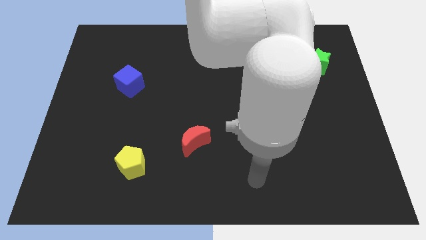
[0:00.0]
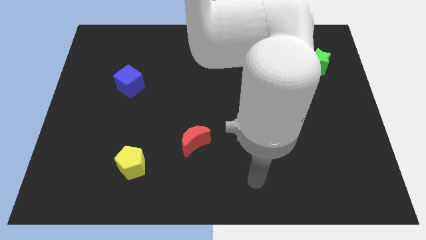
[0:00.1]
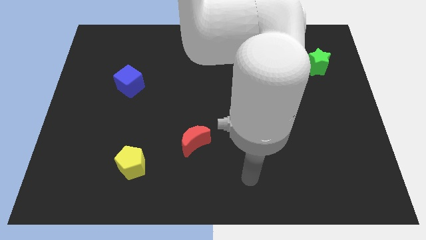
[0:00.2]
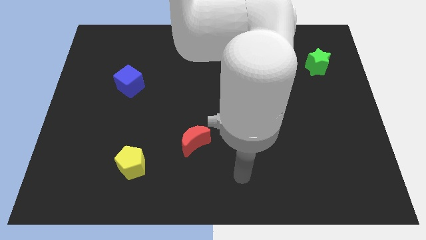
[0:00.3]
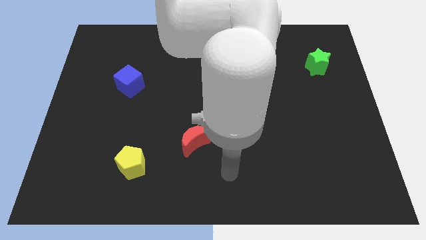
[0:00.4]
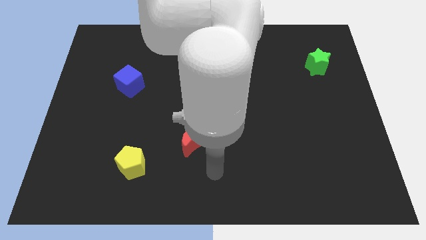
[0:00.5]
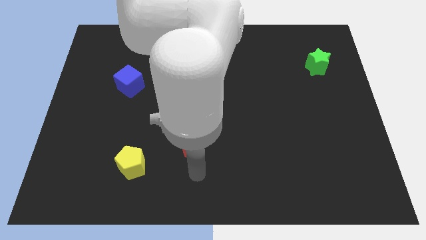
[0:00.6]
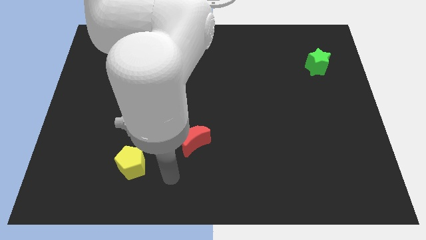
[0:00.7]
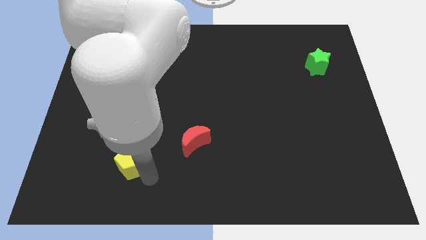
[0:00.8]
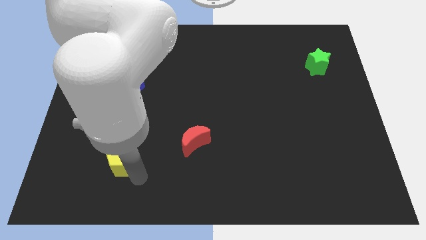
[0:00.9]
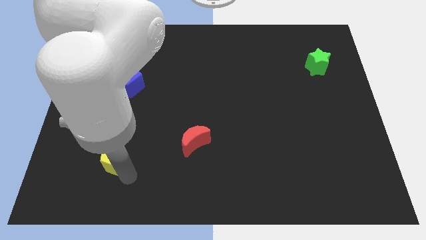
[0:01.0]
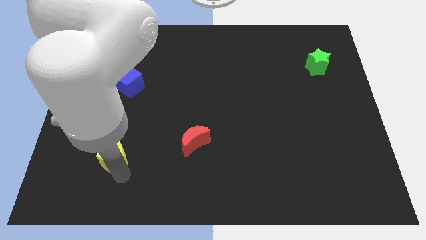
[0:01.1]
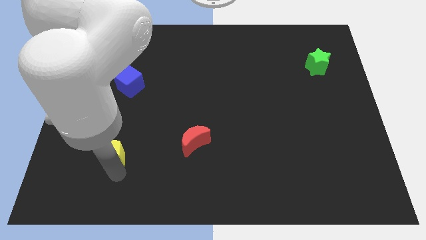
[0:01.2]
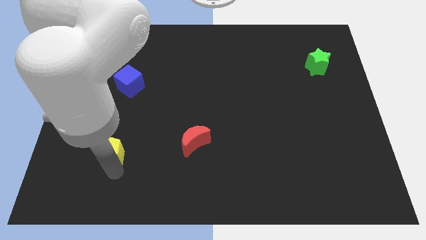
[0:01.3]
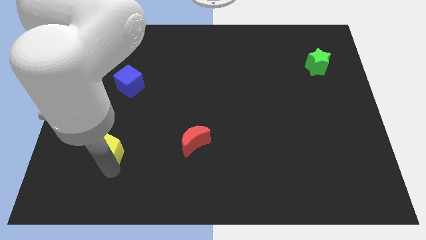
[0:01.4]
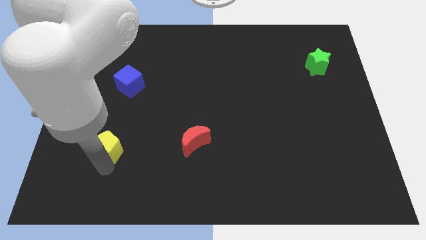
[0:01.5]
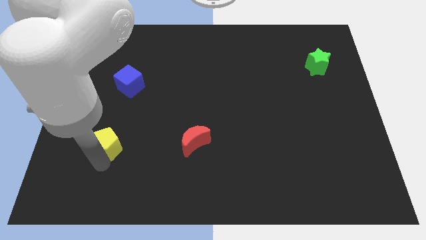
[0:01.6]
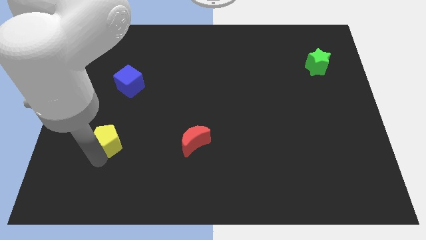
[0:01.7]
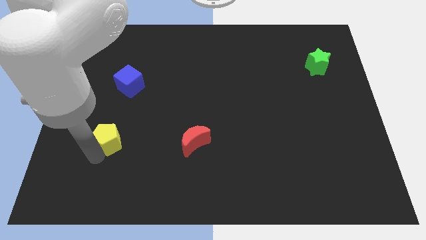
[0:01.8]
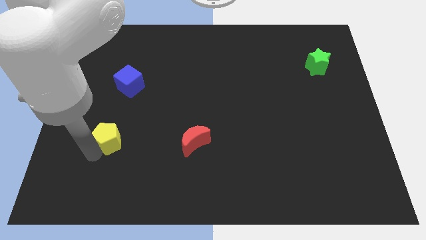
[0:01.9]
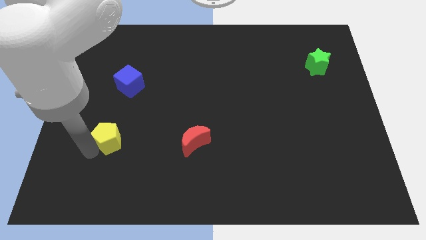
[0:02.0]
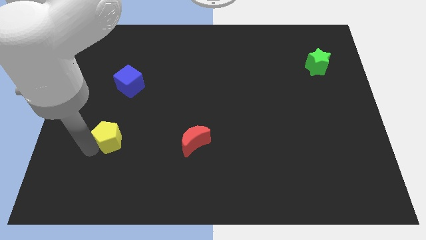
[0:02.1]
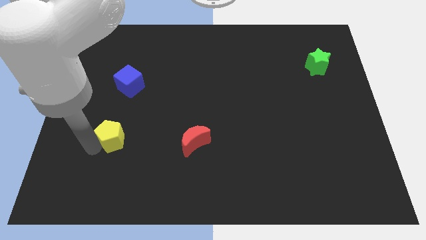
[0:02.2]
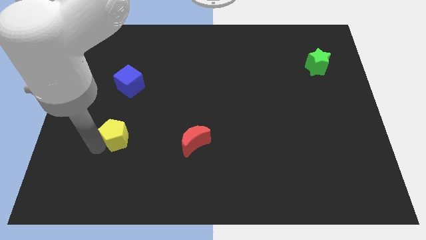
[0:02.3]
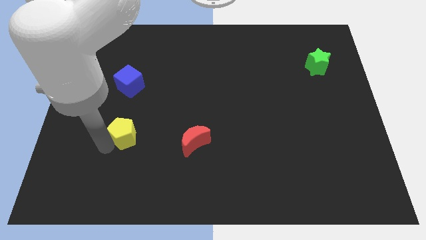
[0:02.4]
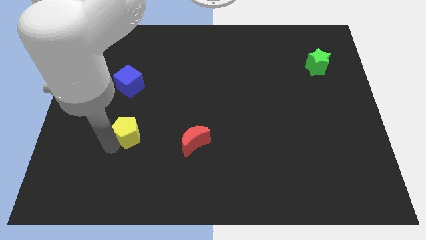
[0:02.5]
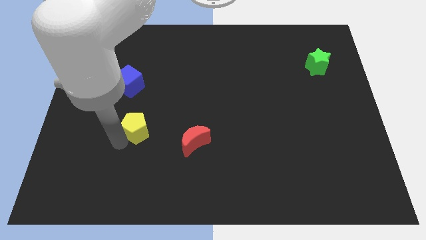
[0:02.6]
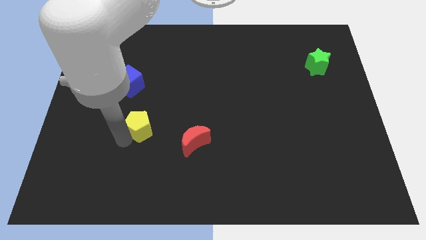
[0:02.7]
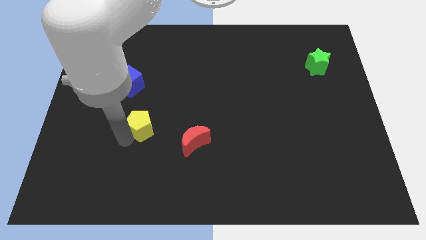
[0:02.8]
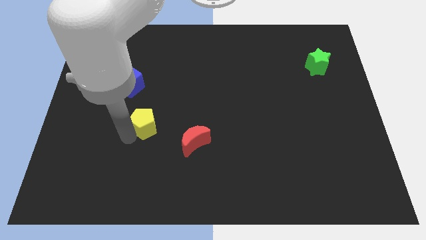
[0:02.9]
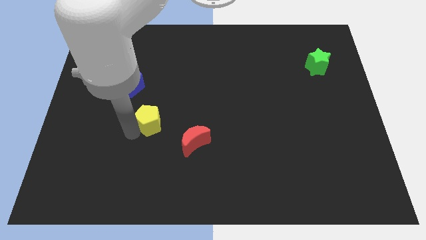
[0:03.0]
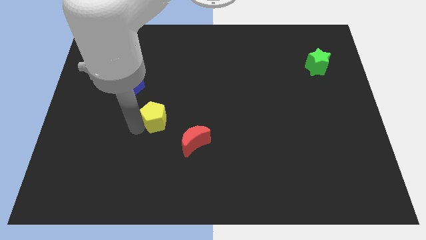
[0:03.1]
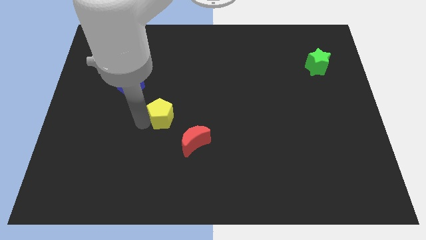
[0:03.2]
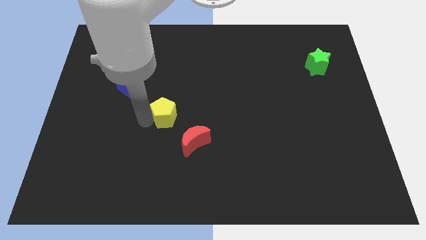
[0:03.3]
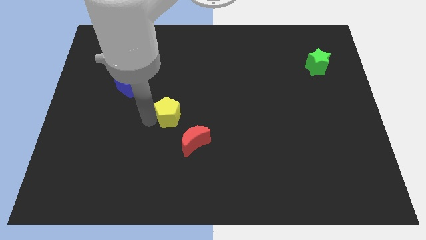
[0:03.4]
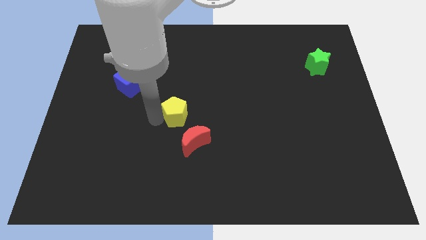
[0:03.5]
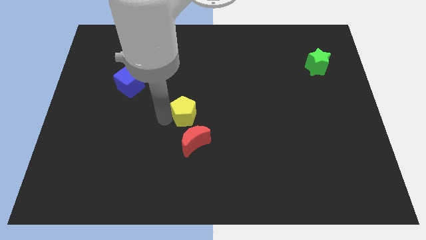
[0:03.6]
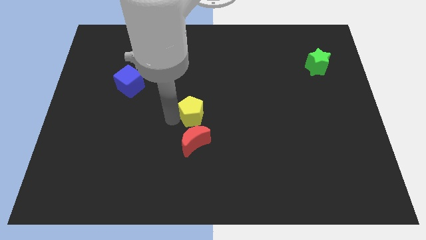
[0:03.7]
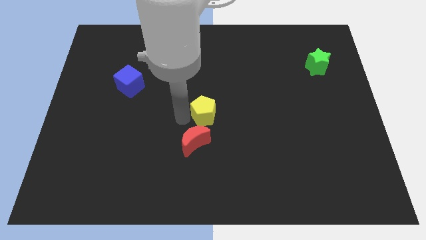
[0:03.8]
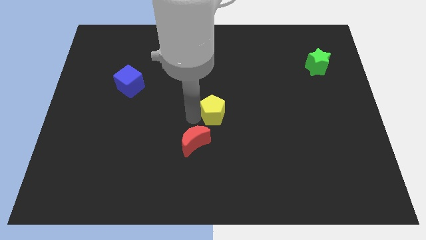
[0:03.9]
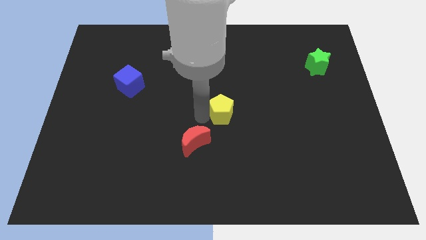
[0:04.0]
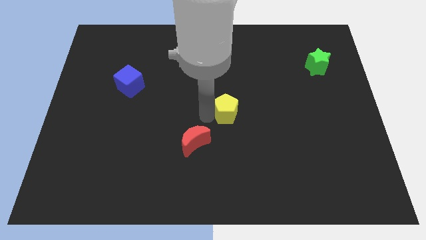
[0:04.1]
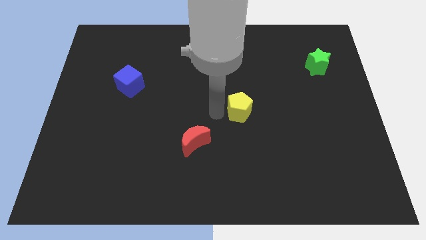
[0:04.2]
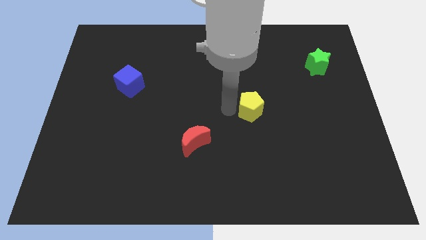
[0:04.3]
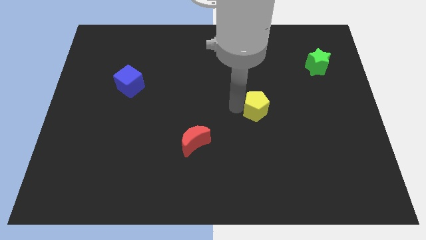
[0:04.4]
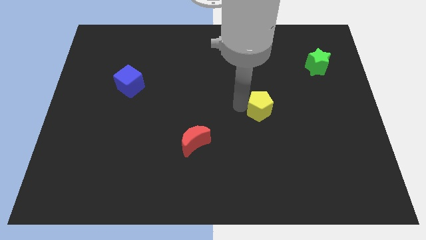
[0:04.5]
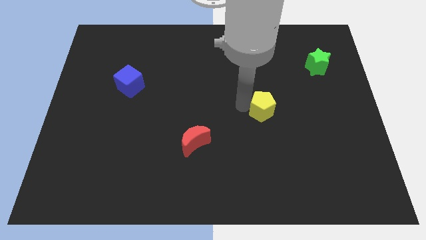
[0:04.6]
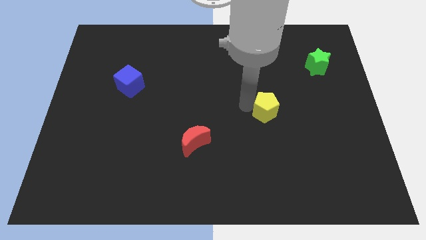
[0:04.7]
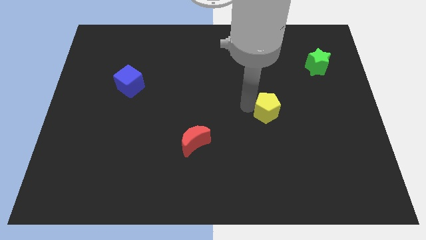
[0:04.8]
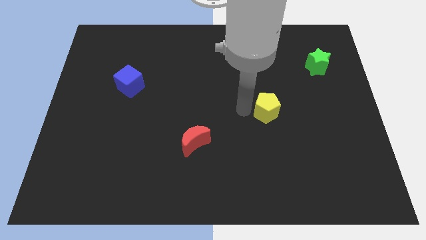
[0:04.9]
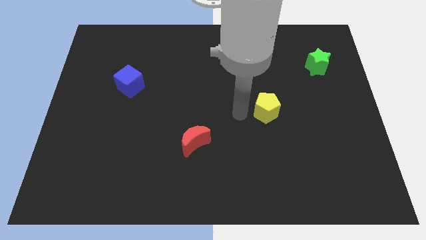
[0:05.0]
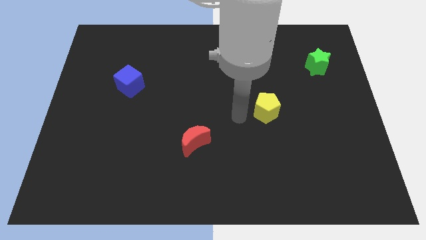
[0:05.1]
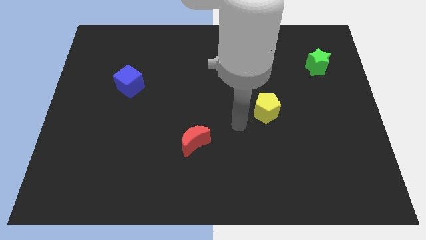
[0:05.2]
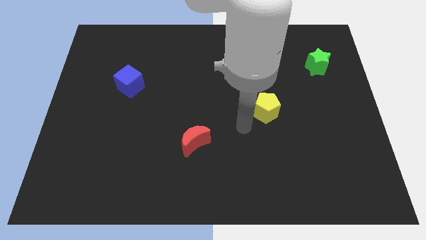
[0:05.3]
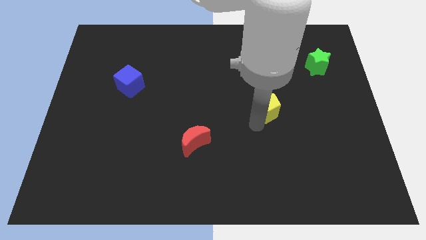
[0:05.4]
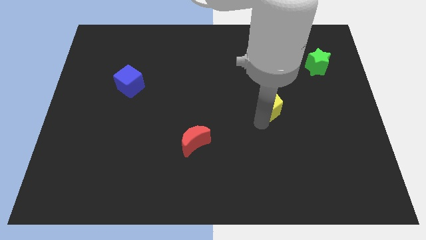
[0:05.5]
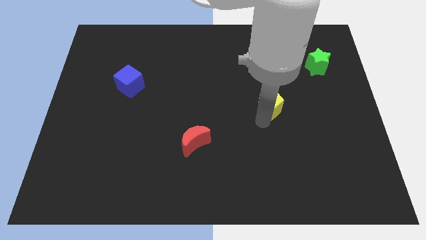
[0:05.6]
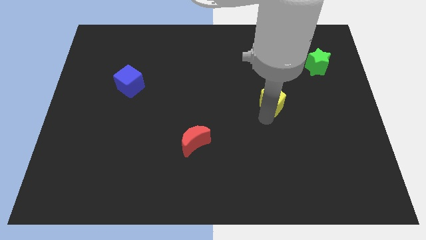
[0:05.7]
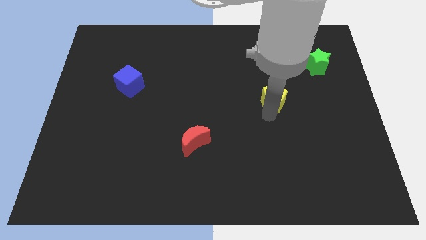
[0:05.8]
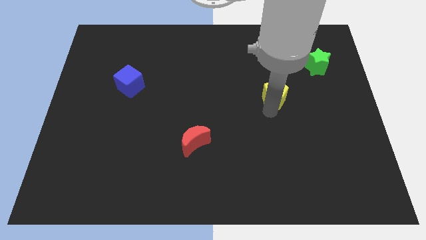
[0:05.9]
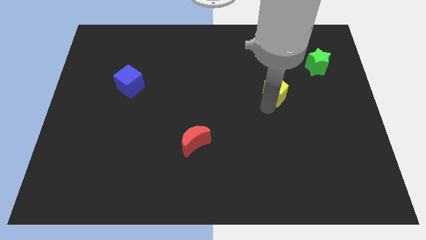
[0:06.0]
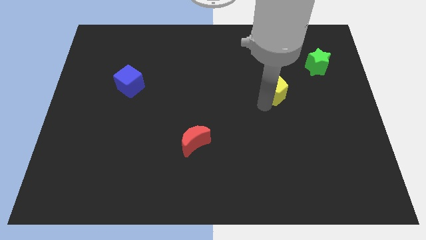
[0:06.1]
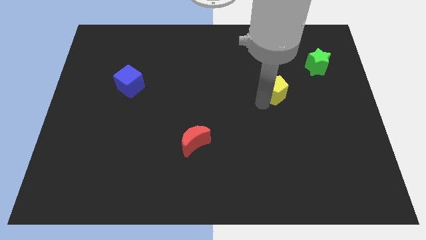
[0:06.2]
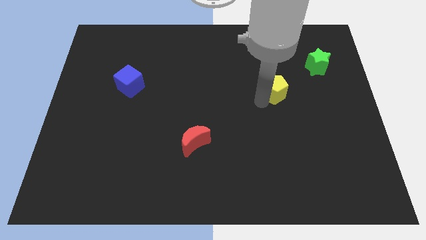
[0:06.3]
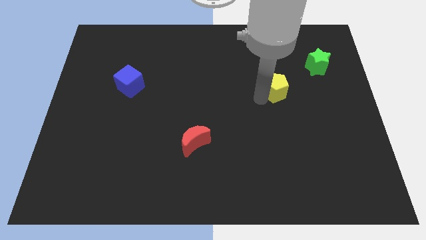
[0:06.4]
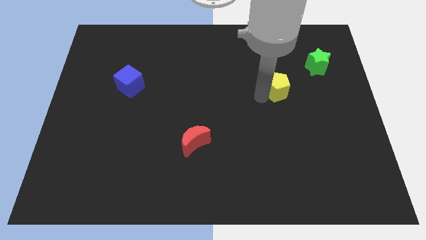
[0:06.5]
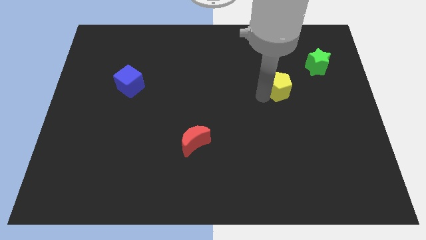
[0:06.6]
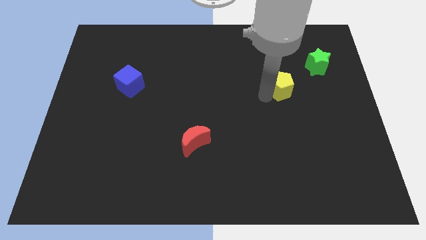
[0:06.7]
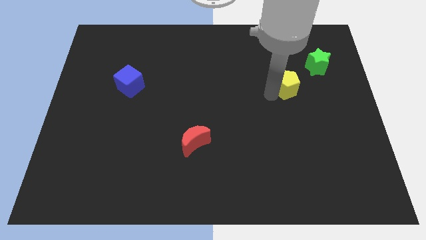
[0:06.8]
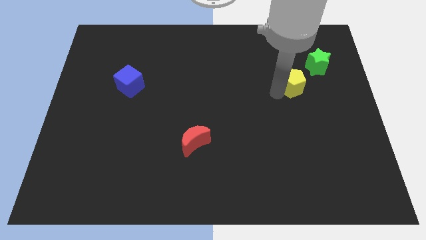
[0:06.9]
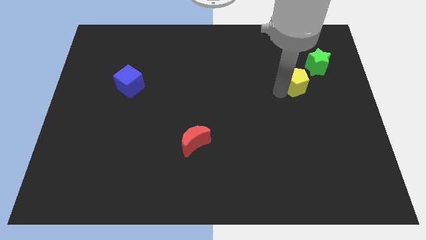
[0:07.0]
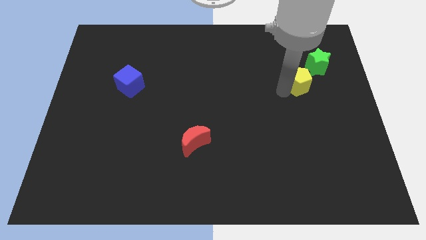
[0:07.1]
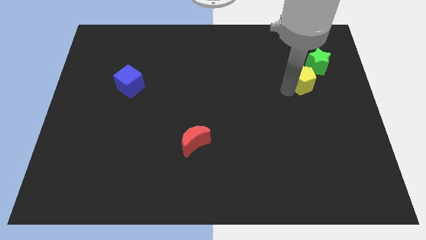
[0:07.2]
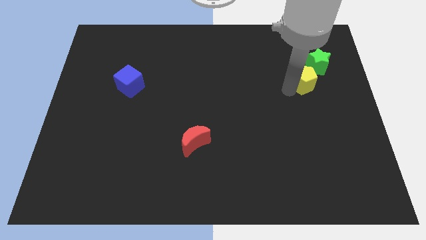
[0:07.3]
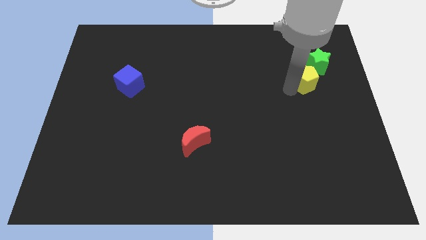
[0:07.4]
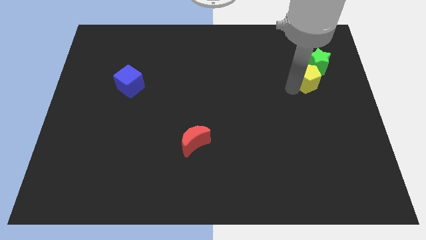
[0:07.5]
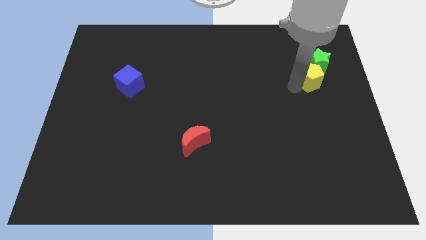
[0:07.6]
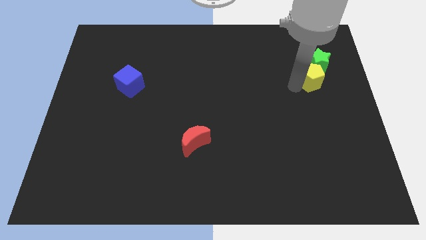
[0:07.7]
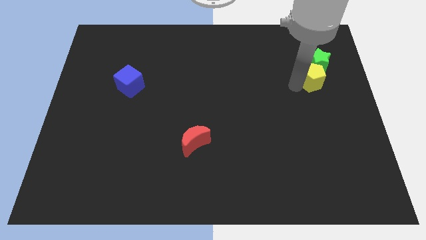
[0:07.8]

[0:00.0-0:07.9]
slide the yellow block towards the green star

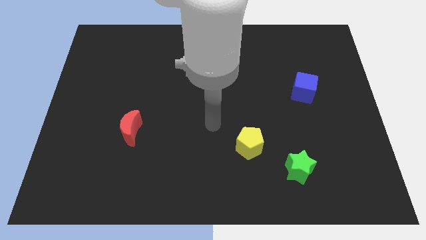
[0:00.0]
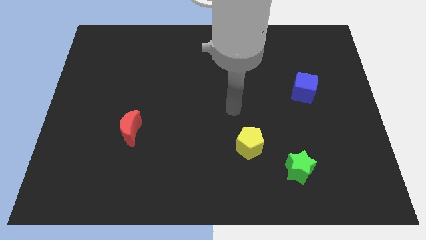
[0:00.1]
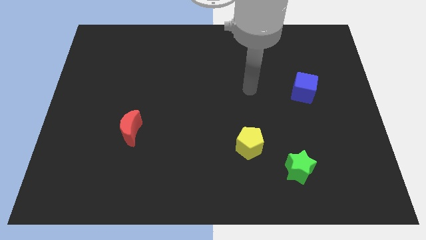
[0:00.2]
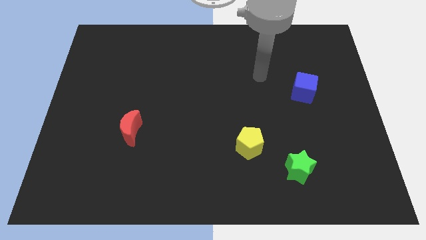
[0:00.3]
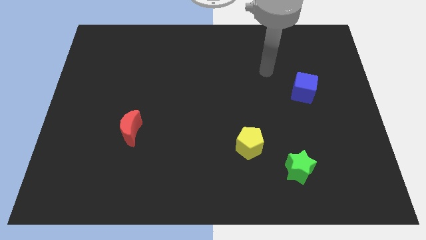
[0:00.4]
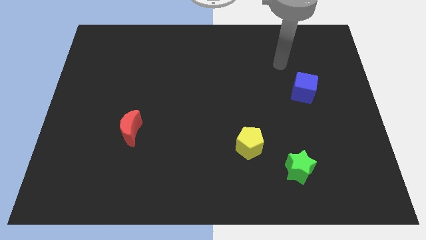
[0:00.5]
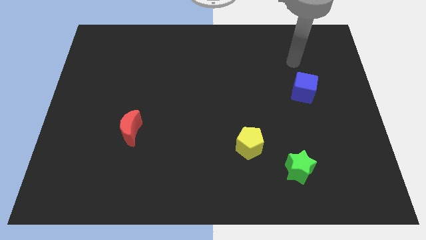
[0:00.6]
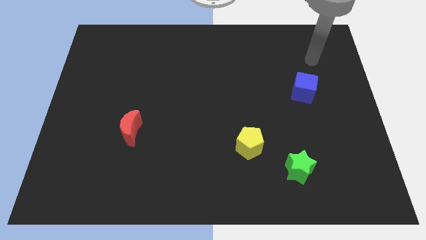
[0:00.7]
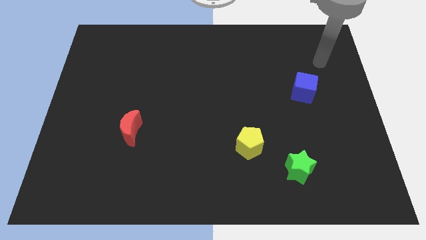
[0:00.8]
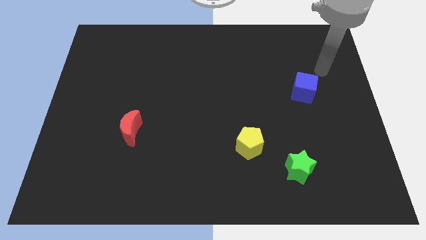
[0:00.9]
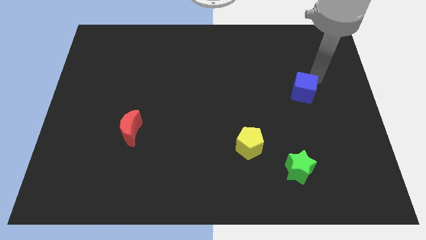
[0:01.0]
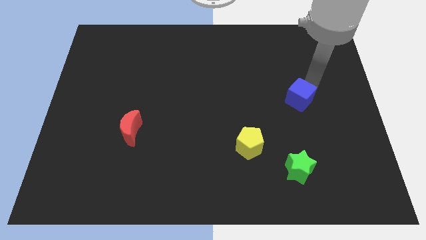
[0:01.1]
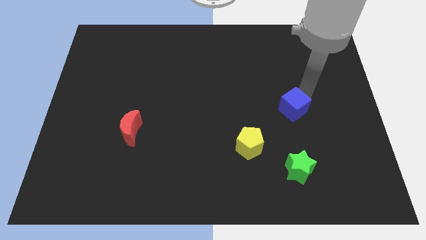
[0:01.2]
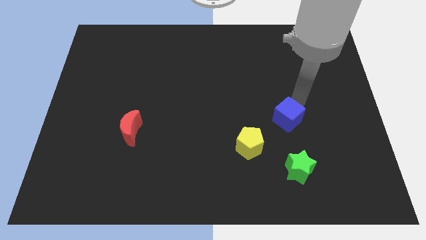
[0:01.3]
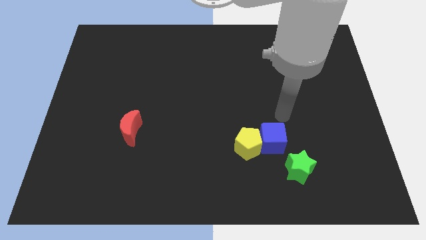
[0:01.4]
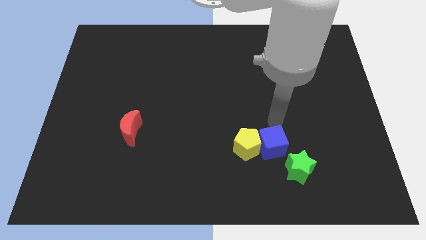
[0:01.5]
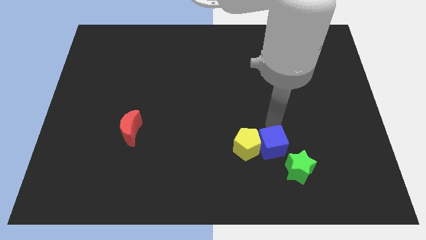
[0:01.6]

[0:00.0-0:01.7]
push the blue cube towards the yellow block
